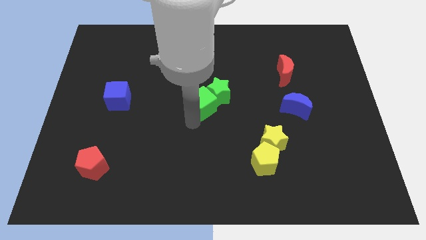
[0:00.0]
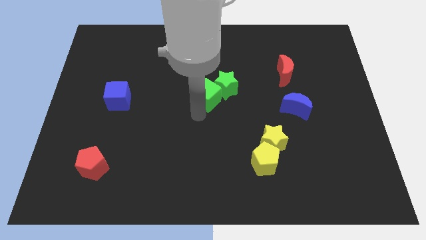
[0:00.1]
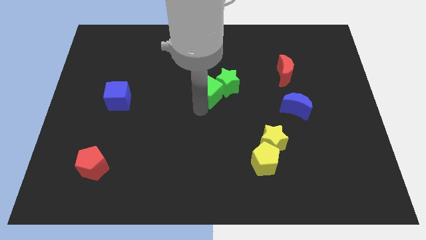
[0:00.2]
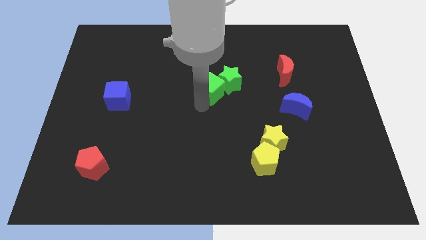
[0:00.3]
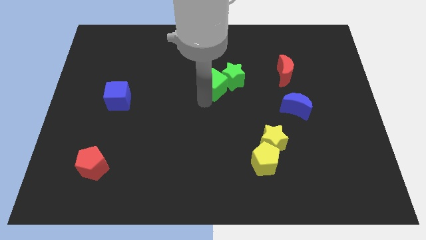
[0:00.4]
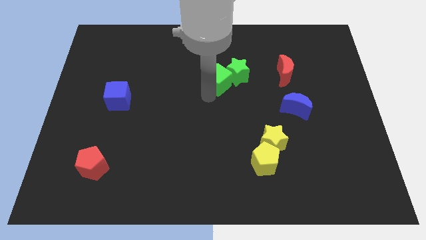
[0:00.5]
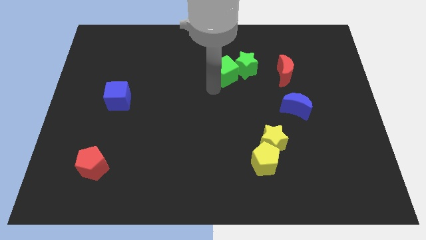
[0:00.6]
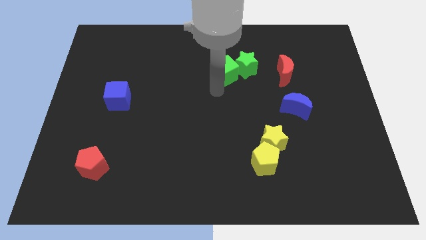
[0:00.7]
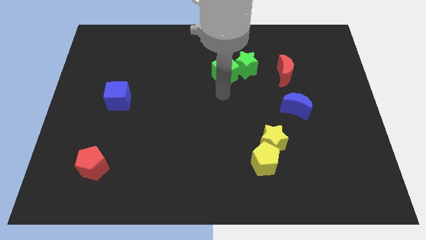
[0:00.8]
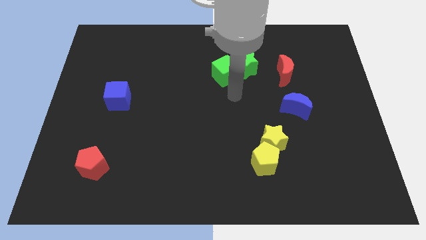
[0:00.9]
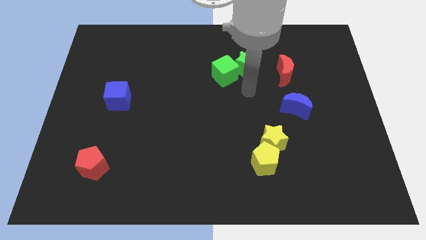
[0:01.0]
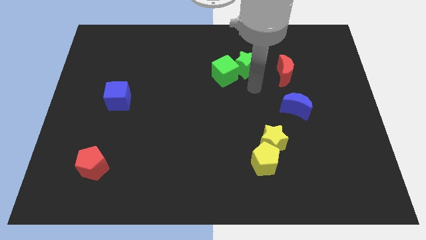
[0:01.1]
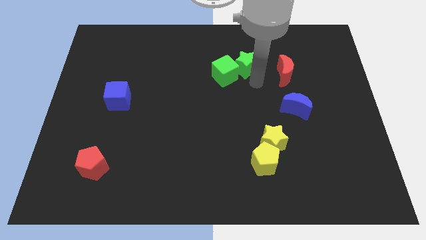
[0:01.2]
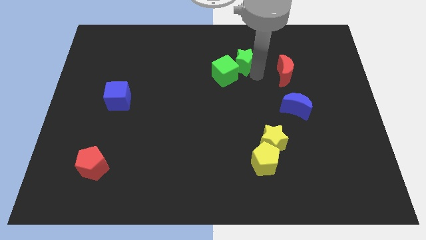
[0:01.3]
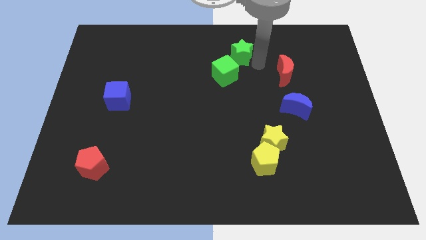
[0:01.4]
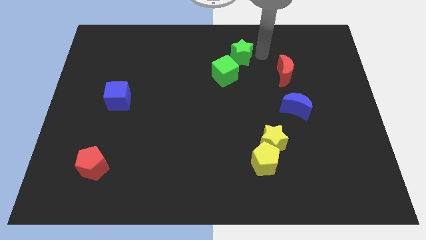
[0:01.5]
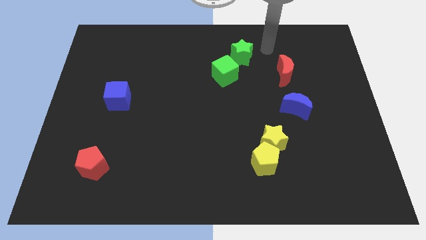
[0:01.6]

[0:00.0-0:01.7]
push the green blocks to the left of the red moon

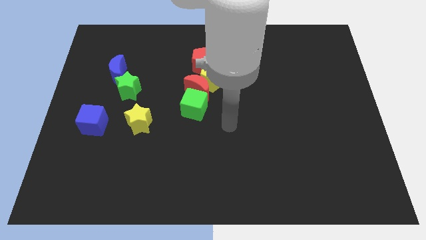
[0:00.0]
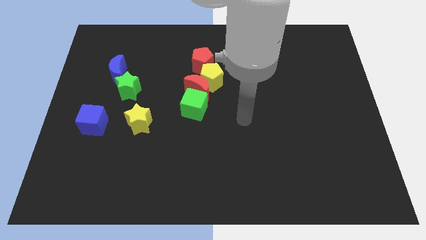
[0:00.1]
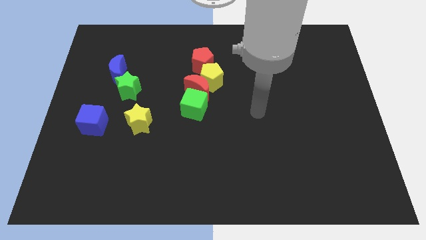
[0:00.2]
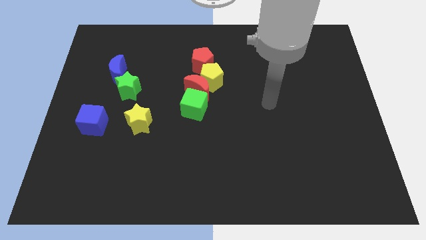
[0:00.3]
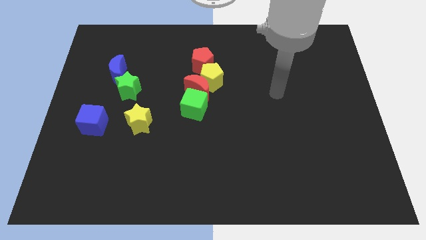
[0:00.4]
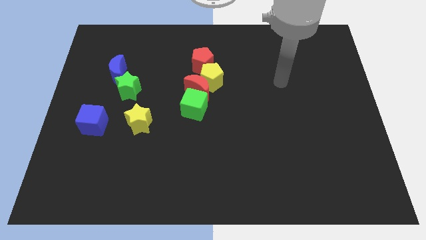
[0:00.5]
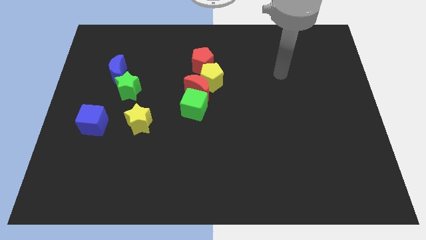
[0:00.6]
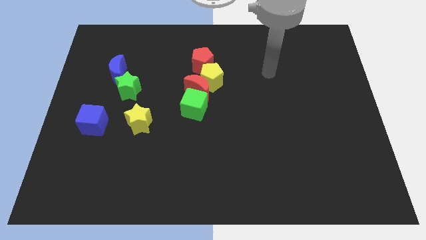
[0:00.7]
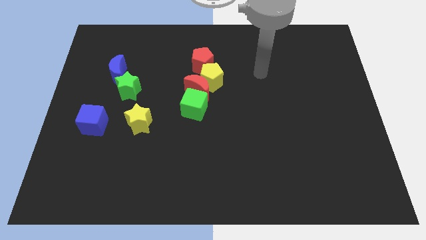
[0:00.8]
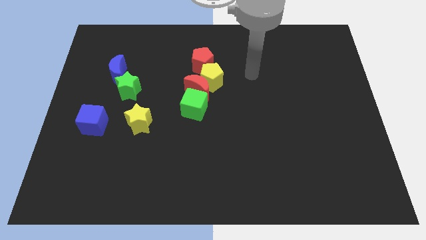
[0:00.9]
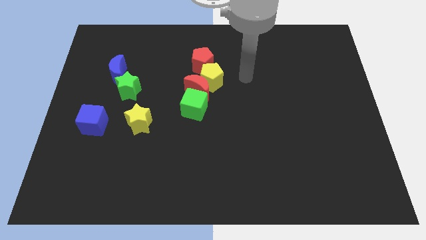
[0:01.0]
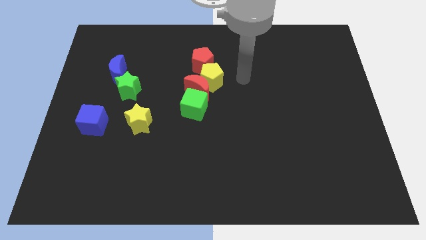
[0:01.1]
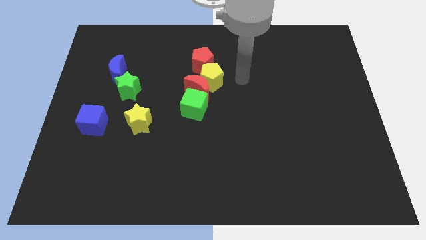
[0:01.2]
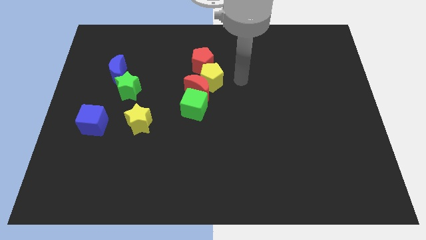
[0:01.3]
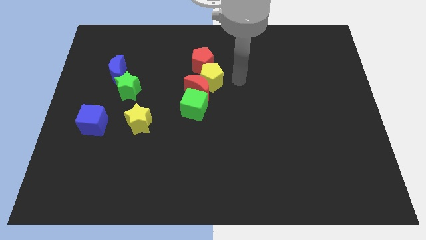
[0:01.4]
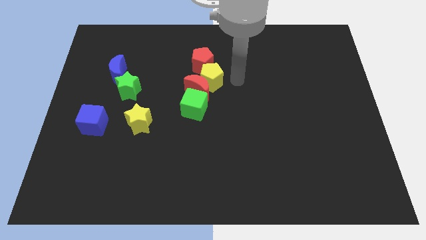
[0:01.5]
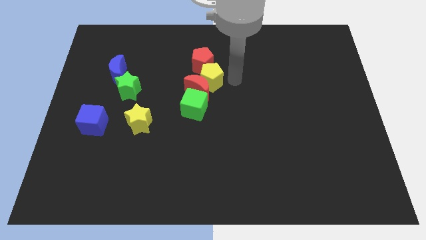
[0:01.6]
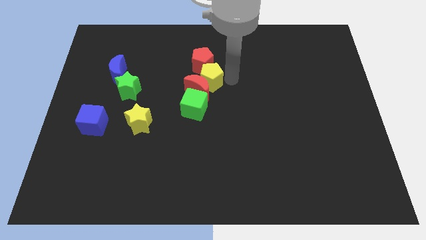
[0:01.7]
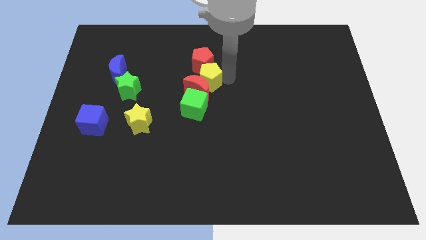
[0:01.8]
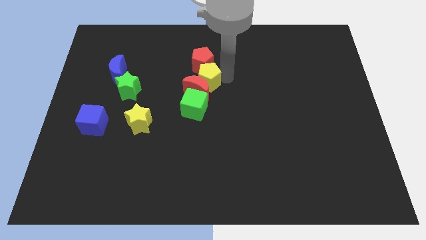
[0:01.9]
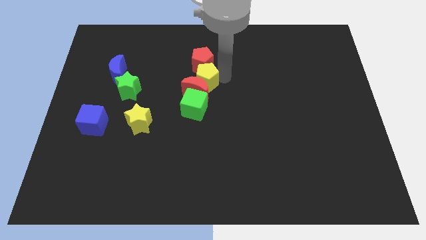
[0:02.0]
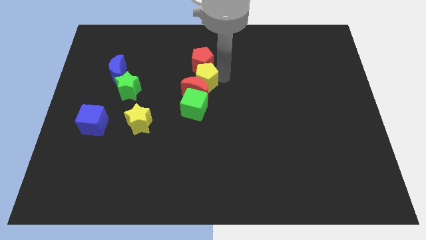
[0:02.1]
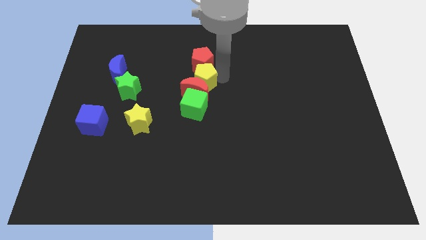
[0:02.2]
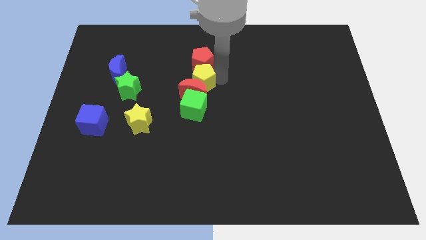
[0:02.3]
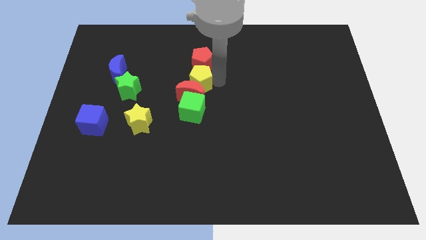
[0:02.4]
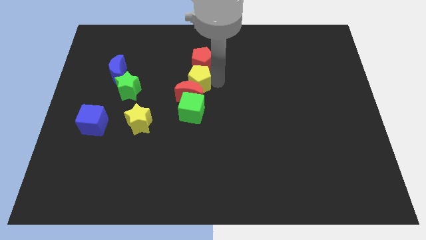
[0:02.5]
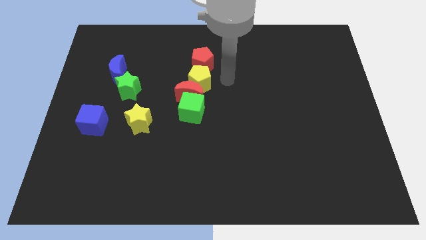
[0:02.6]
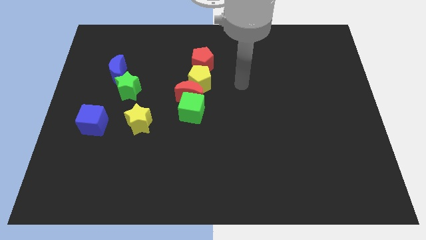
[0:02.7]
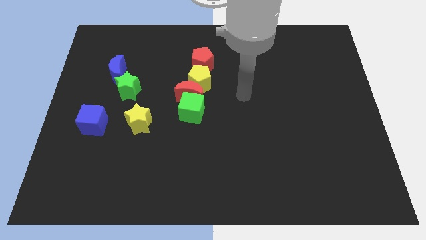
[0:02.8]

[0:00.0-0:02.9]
move yellow pentagon slightly to the left

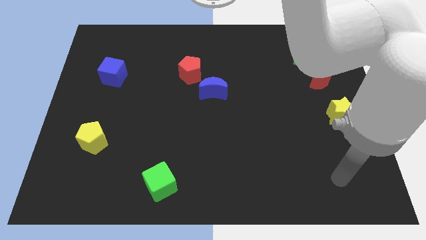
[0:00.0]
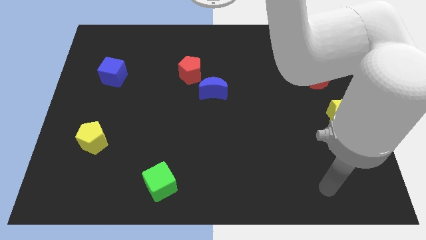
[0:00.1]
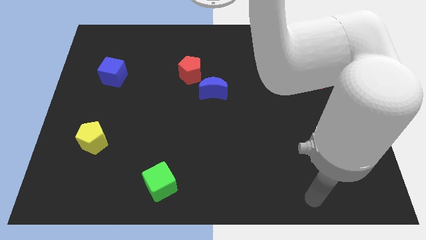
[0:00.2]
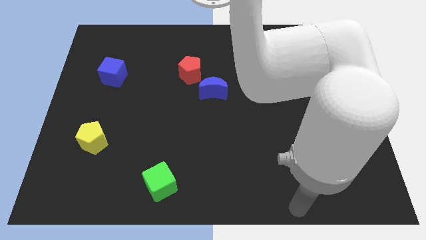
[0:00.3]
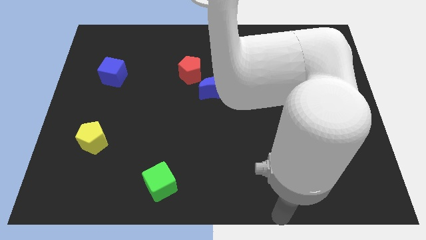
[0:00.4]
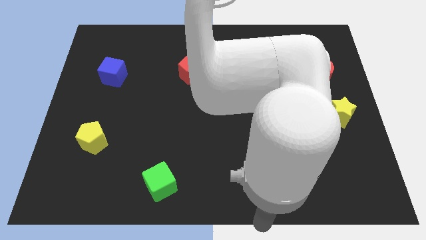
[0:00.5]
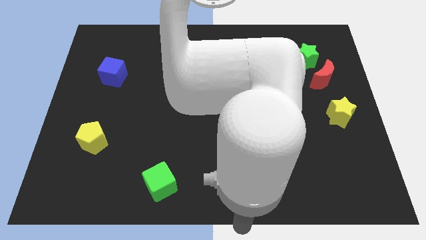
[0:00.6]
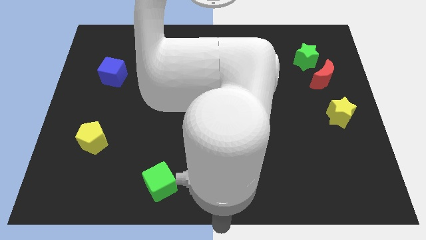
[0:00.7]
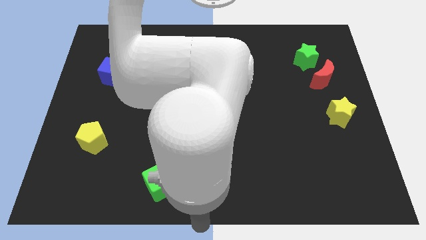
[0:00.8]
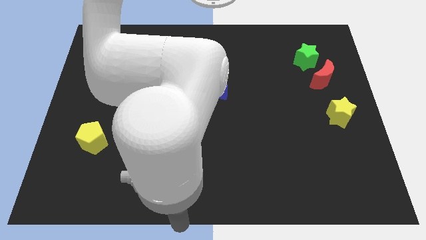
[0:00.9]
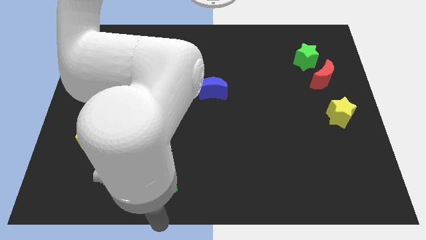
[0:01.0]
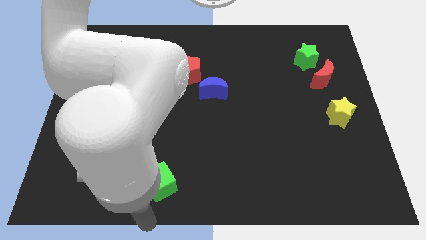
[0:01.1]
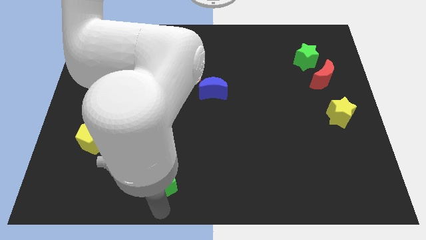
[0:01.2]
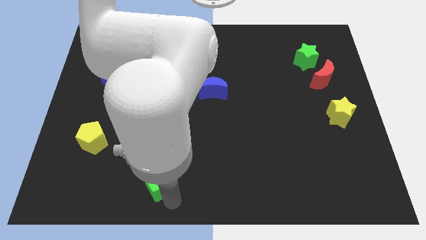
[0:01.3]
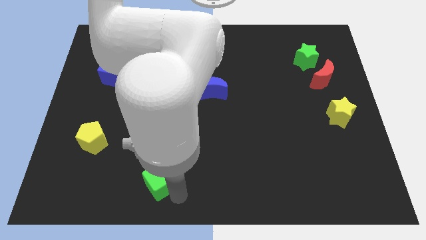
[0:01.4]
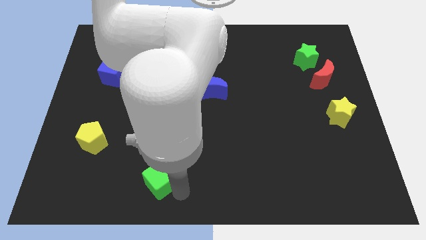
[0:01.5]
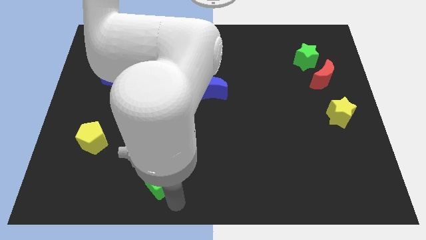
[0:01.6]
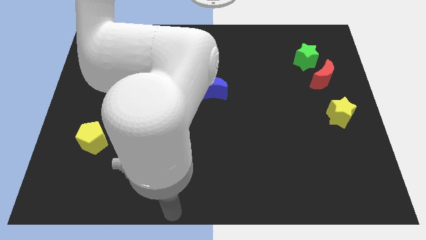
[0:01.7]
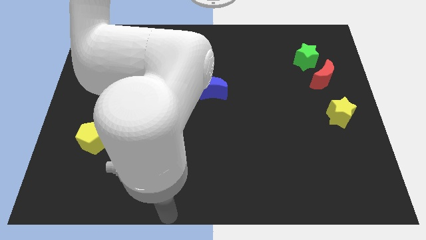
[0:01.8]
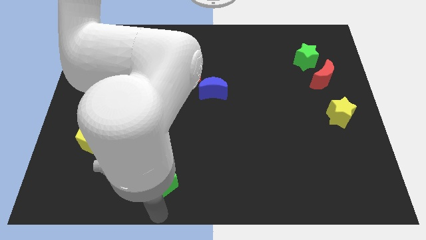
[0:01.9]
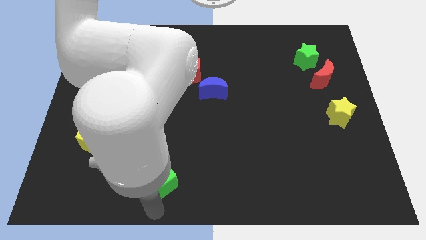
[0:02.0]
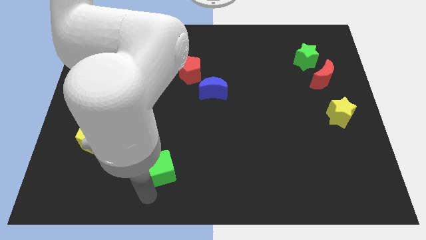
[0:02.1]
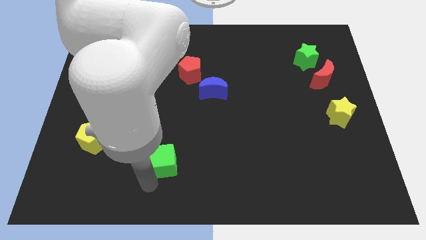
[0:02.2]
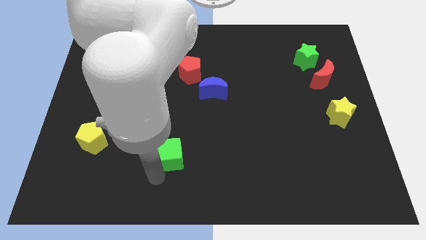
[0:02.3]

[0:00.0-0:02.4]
push the green cube

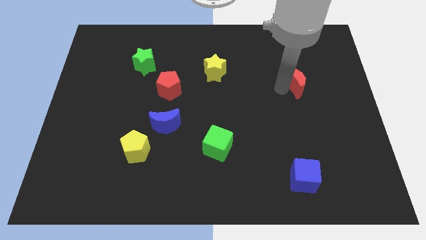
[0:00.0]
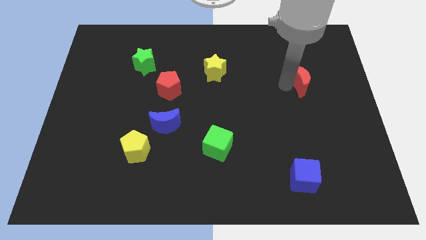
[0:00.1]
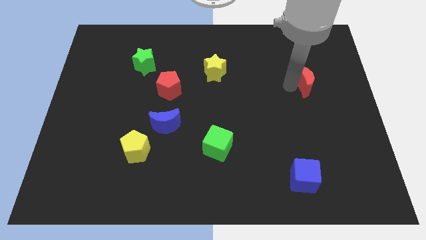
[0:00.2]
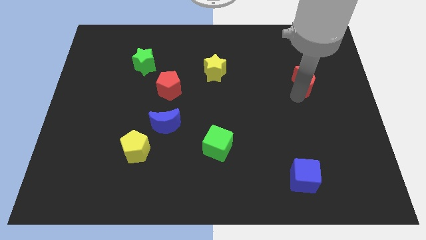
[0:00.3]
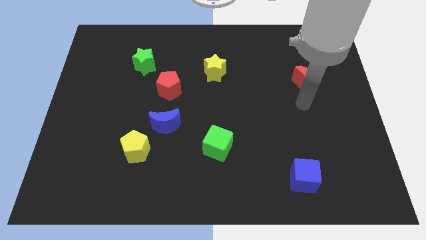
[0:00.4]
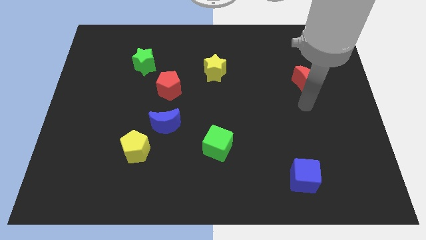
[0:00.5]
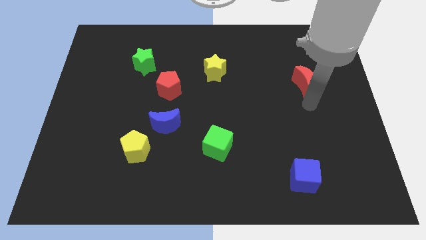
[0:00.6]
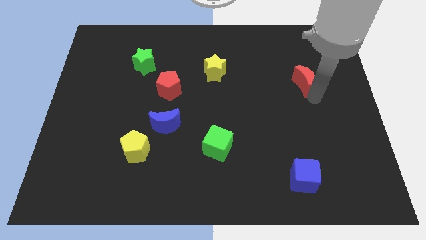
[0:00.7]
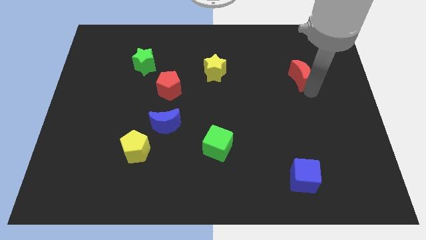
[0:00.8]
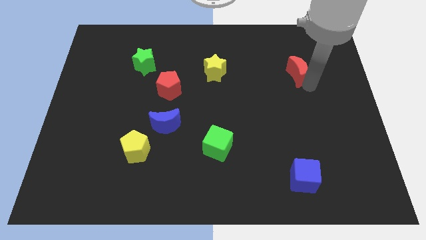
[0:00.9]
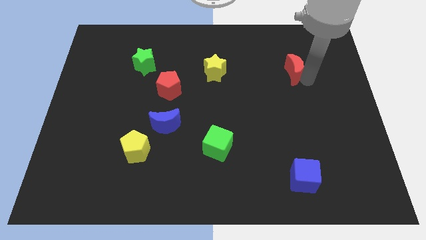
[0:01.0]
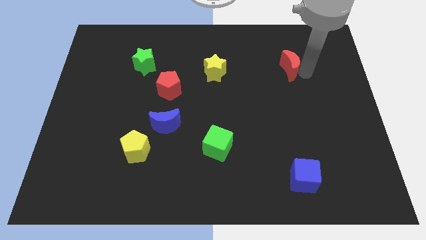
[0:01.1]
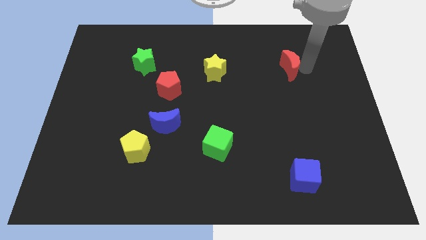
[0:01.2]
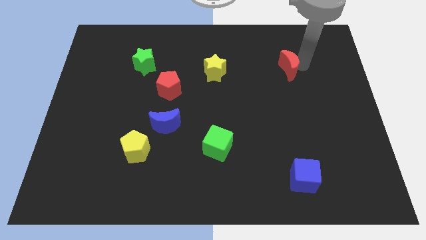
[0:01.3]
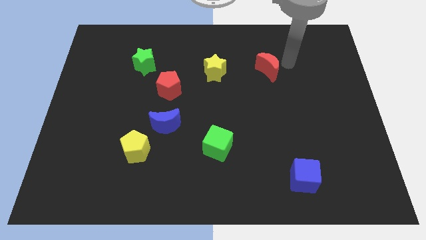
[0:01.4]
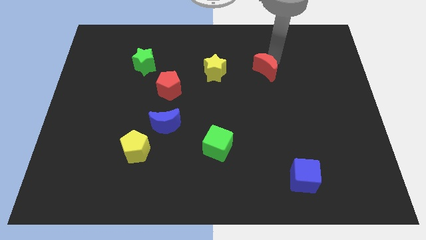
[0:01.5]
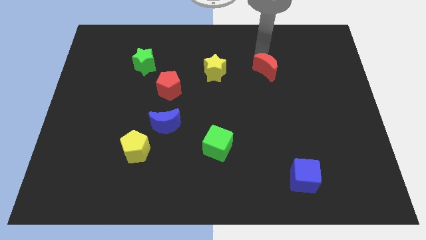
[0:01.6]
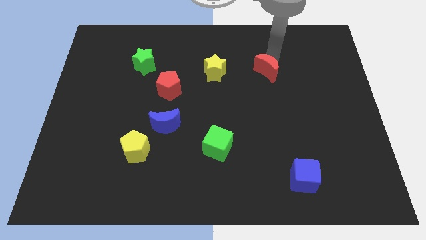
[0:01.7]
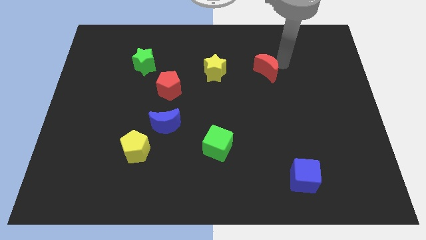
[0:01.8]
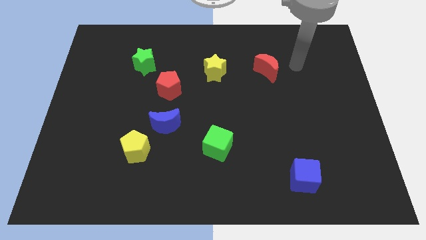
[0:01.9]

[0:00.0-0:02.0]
slide the red moon towards the yellow star
